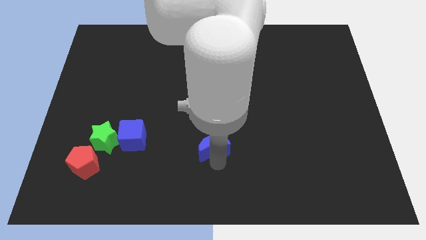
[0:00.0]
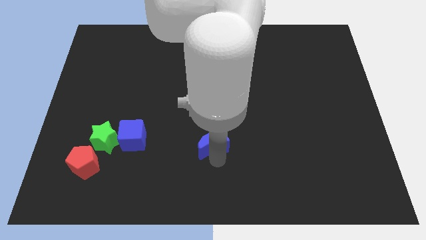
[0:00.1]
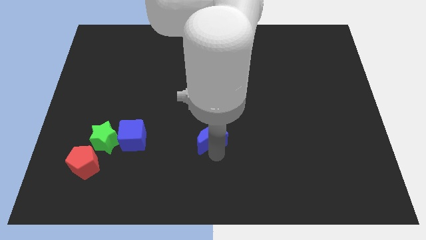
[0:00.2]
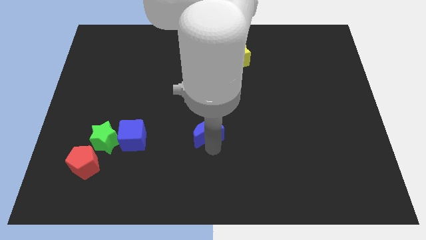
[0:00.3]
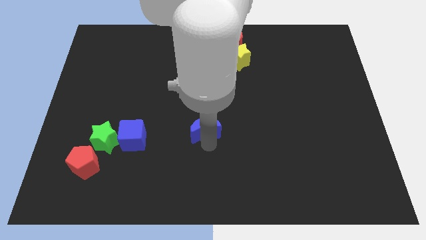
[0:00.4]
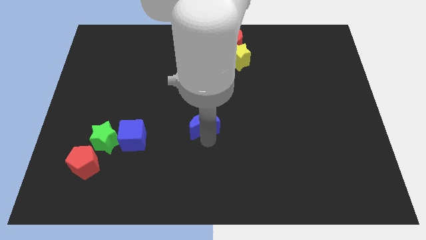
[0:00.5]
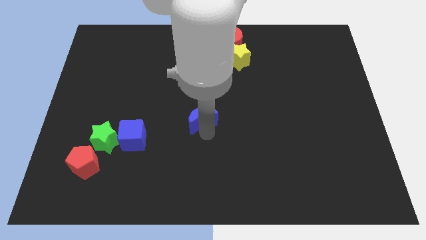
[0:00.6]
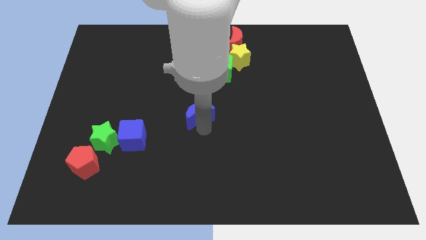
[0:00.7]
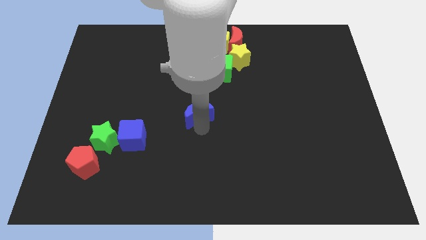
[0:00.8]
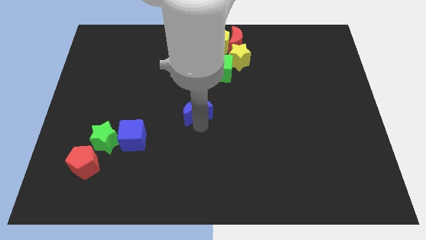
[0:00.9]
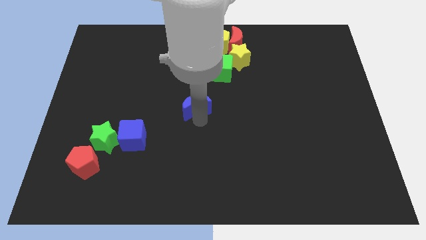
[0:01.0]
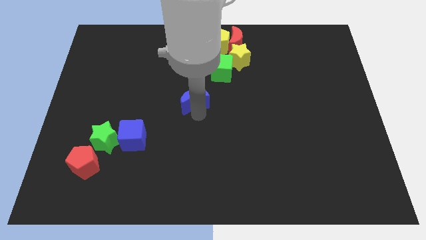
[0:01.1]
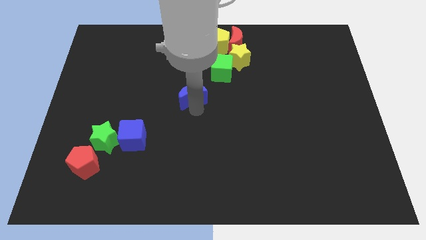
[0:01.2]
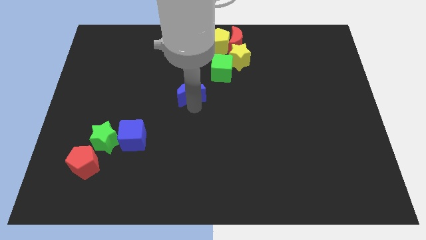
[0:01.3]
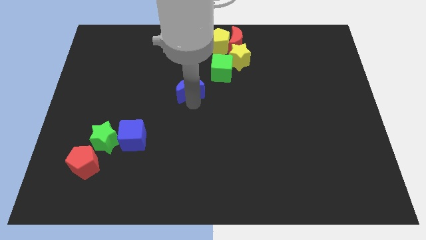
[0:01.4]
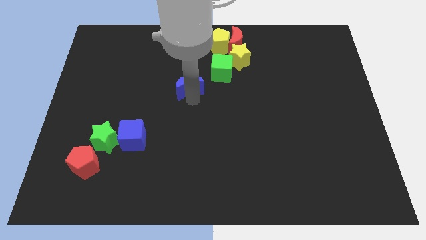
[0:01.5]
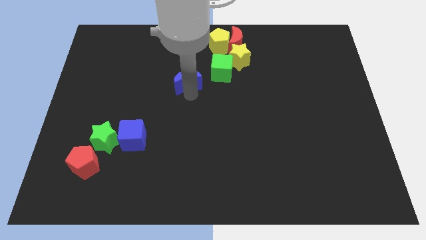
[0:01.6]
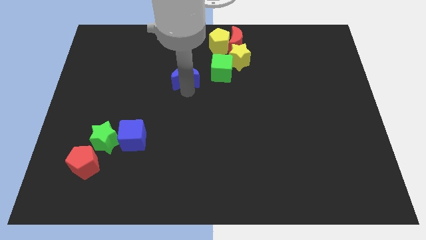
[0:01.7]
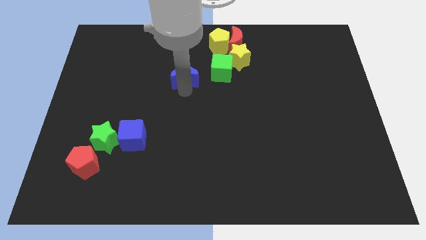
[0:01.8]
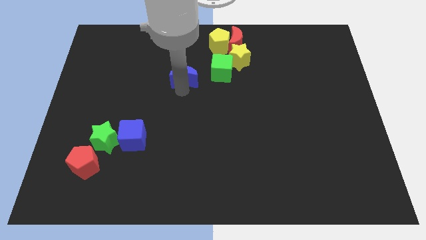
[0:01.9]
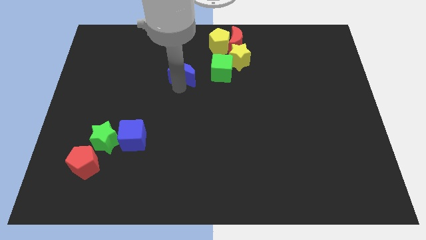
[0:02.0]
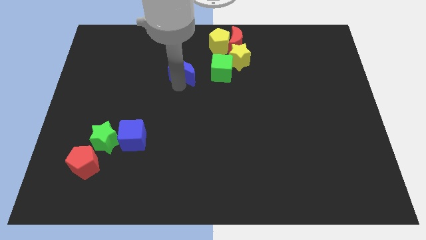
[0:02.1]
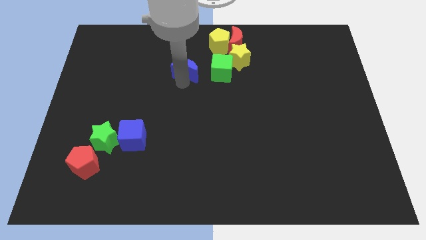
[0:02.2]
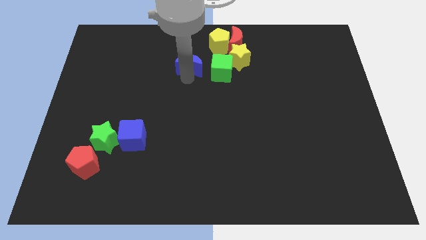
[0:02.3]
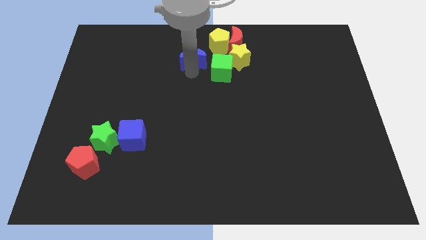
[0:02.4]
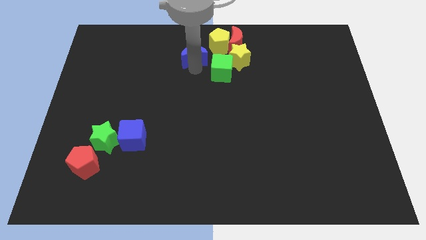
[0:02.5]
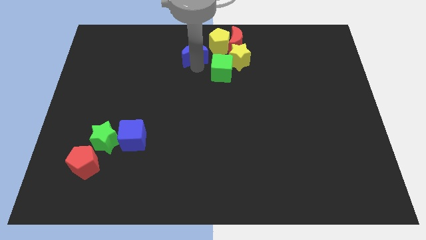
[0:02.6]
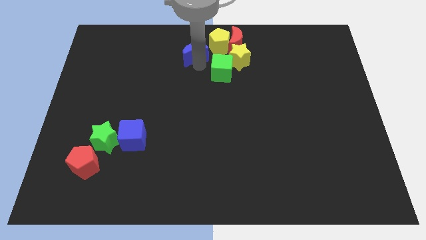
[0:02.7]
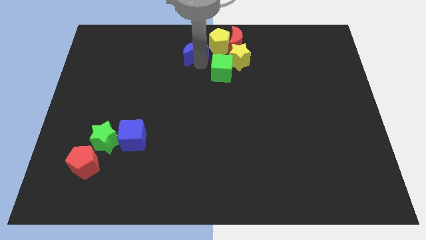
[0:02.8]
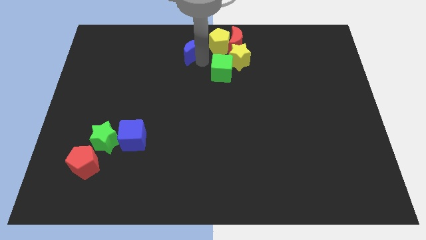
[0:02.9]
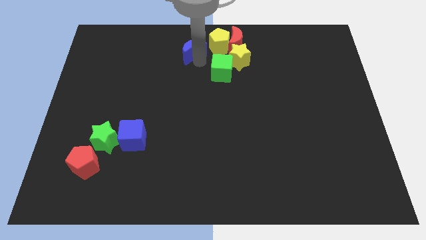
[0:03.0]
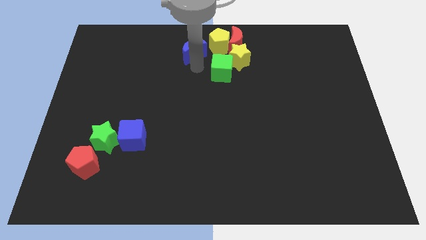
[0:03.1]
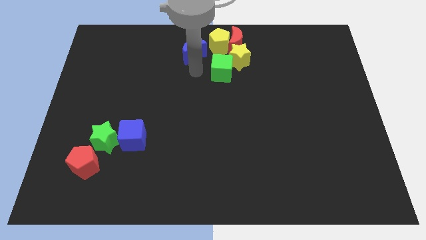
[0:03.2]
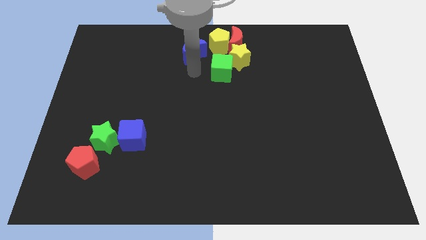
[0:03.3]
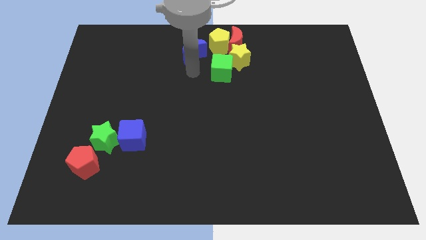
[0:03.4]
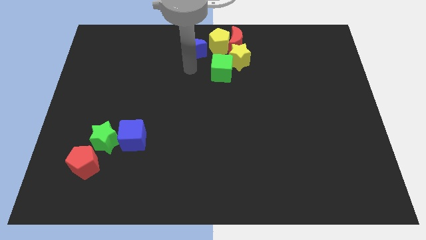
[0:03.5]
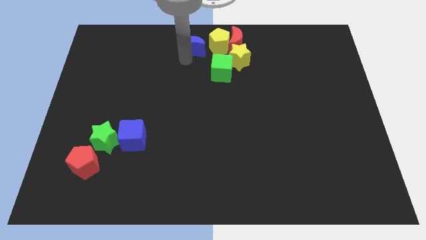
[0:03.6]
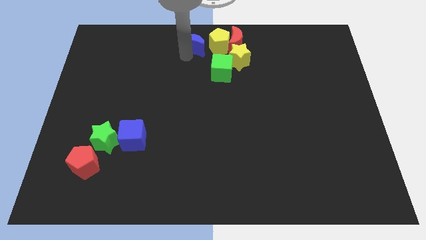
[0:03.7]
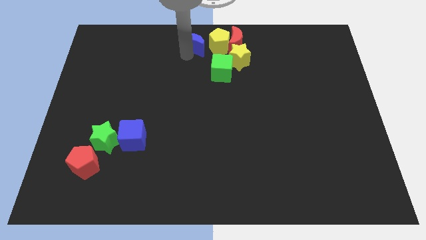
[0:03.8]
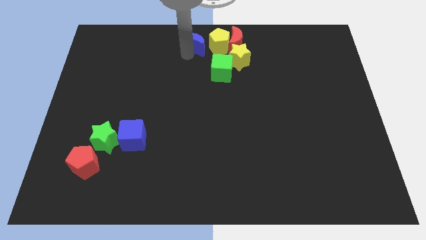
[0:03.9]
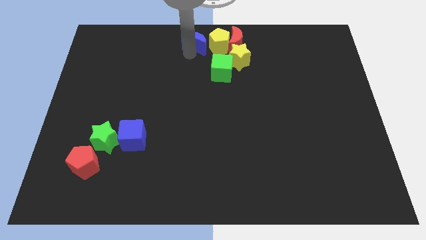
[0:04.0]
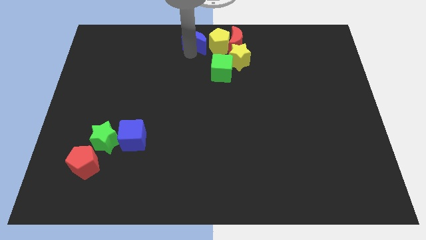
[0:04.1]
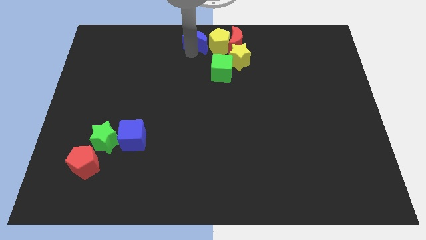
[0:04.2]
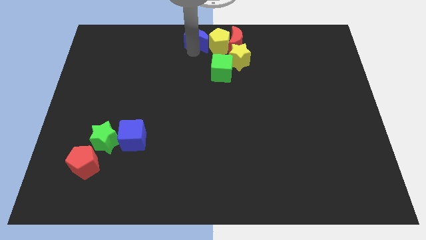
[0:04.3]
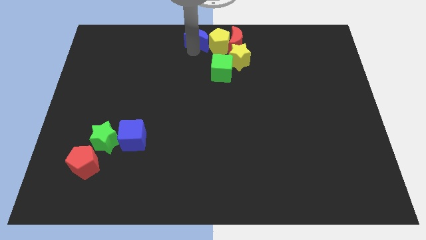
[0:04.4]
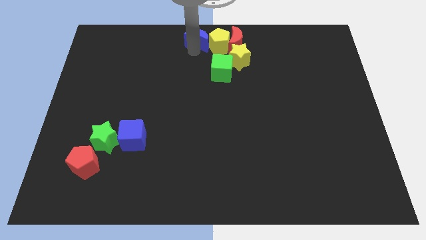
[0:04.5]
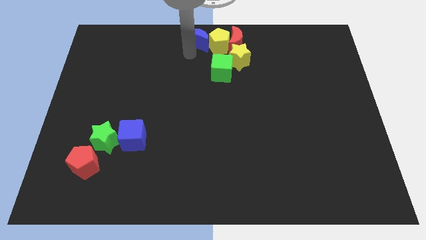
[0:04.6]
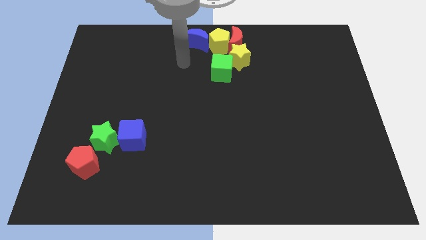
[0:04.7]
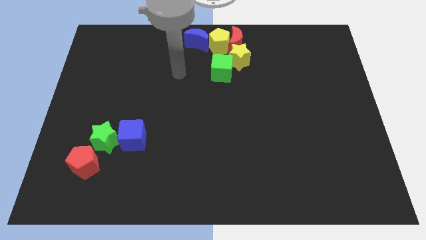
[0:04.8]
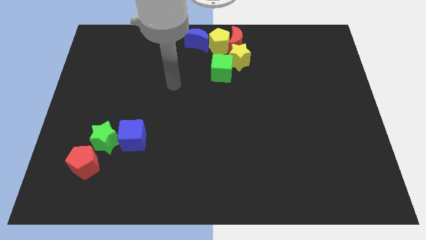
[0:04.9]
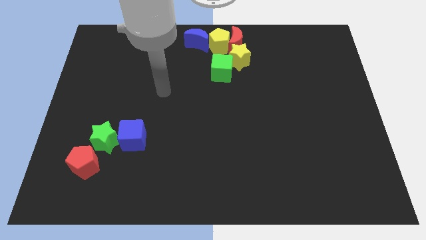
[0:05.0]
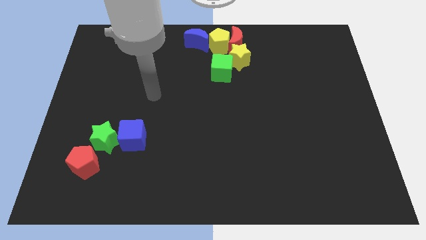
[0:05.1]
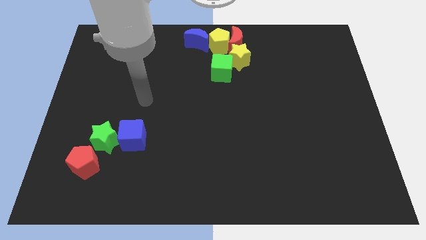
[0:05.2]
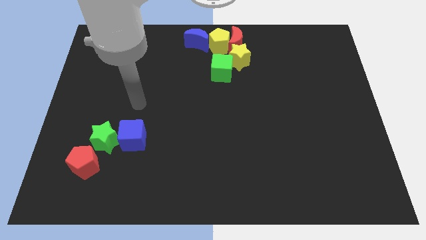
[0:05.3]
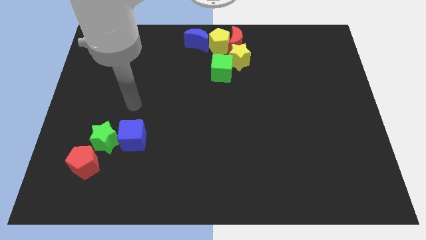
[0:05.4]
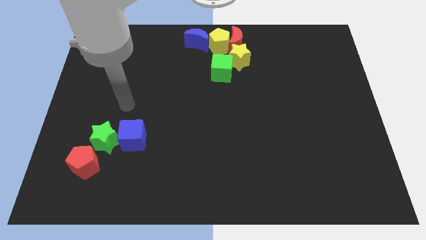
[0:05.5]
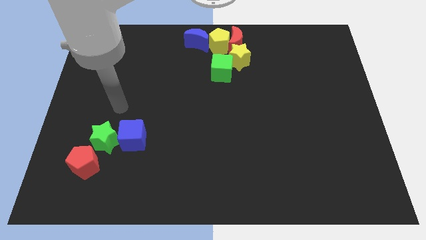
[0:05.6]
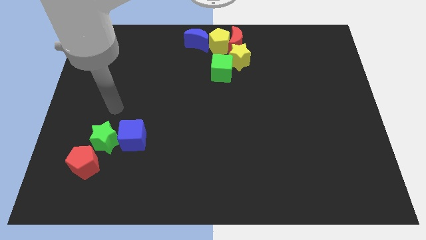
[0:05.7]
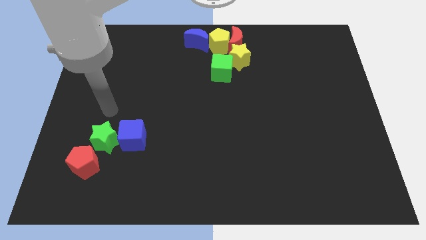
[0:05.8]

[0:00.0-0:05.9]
place the blue moon left to the yellow pentagon

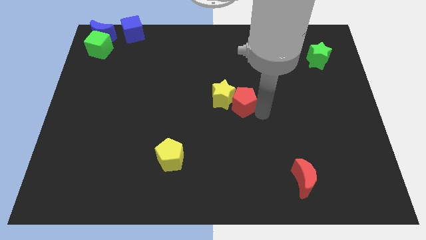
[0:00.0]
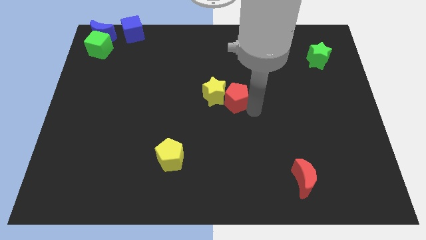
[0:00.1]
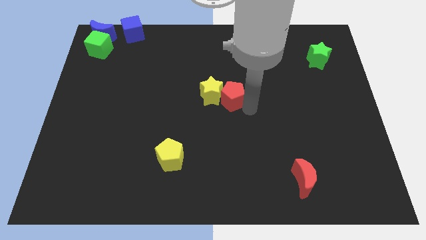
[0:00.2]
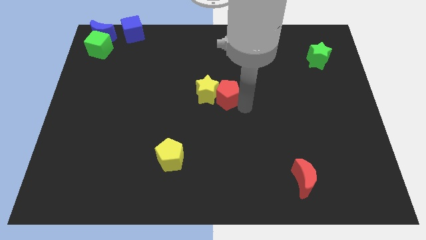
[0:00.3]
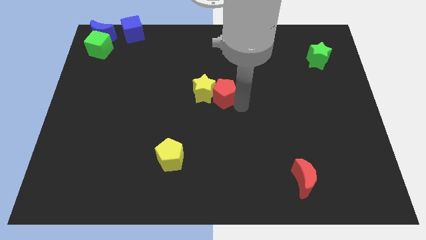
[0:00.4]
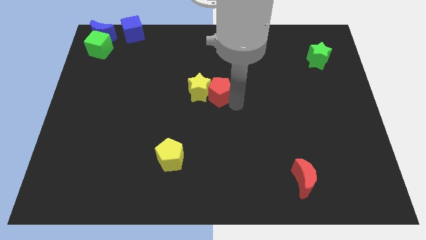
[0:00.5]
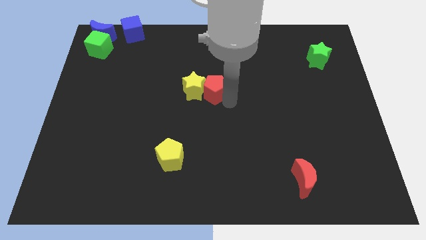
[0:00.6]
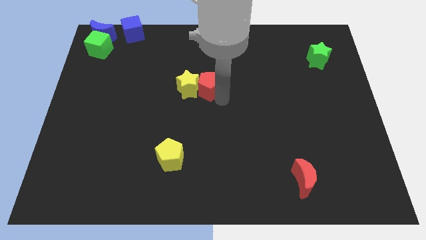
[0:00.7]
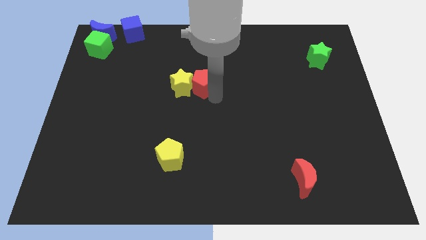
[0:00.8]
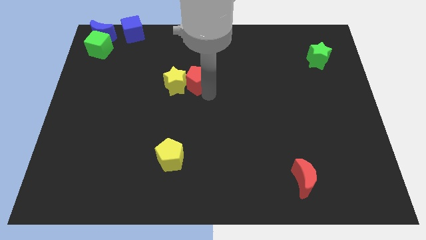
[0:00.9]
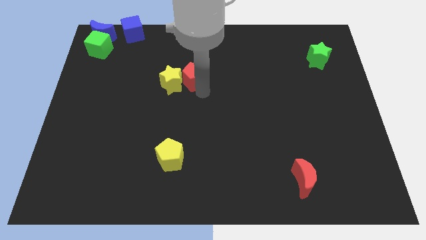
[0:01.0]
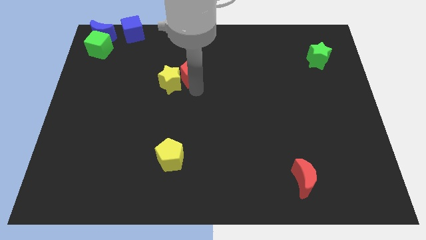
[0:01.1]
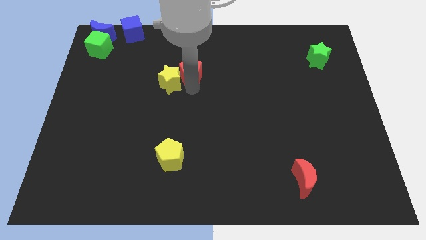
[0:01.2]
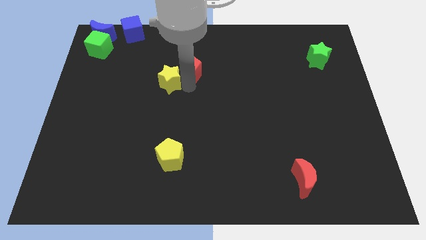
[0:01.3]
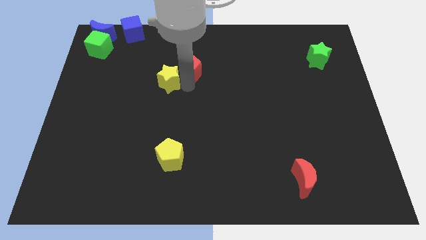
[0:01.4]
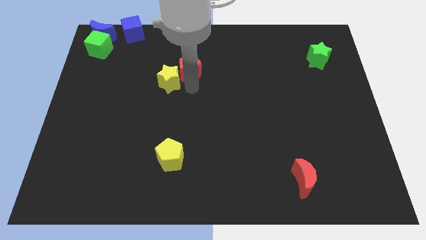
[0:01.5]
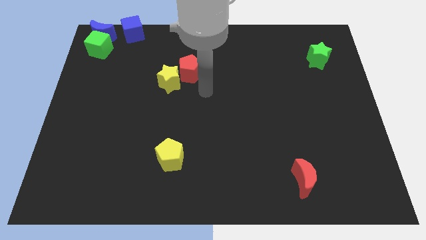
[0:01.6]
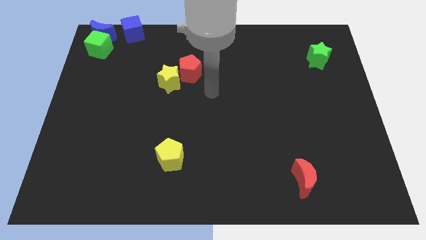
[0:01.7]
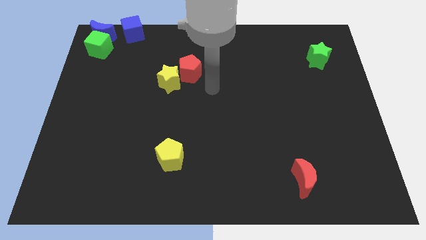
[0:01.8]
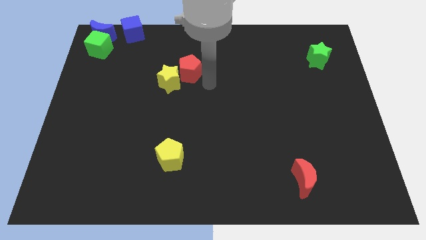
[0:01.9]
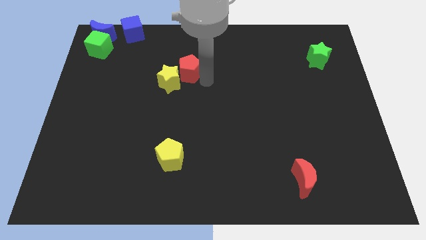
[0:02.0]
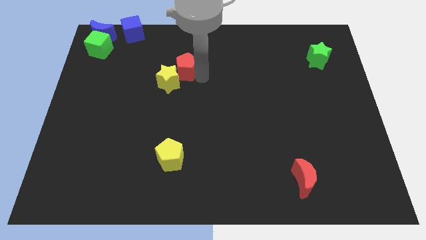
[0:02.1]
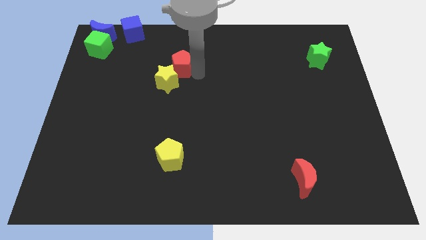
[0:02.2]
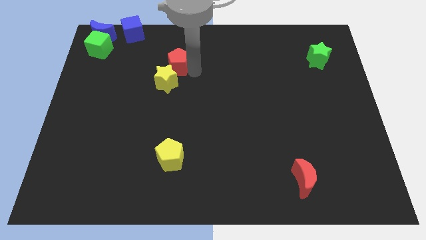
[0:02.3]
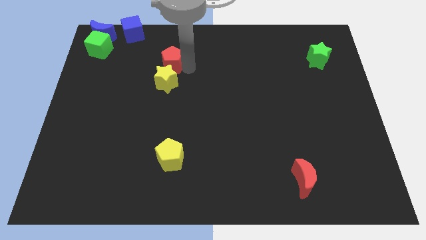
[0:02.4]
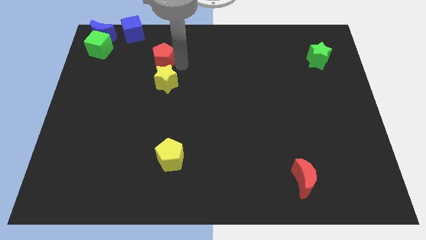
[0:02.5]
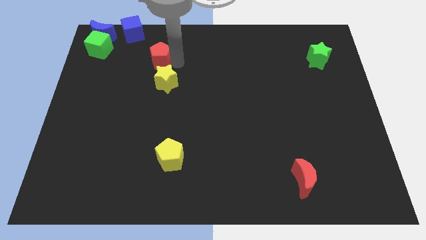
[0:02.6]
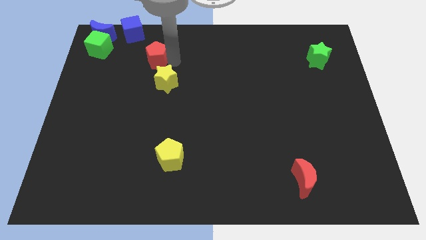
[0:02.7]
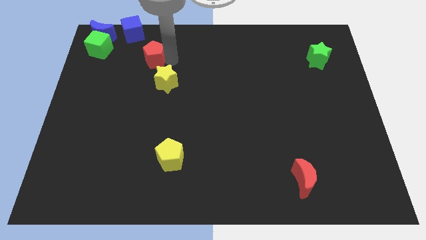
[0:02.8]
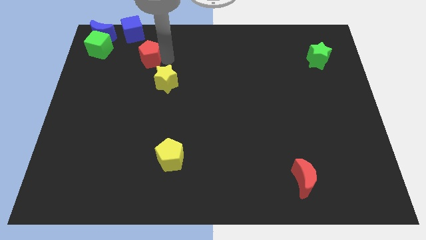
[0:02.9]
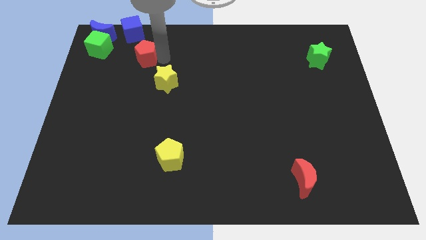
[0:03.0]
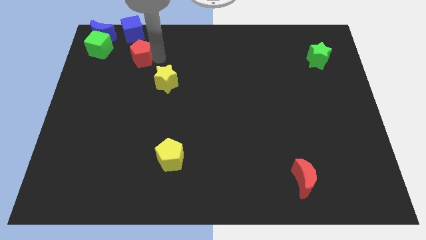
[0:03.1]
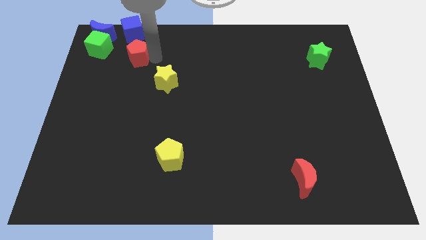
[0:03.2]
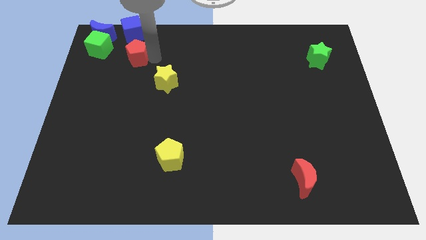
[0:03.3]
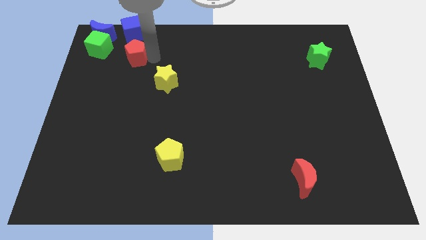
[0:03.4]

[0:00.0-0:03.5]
place red pentagon to the bottom of blue cube
